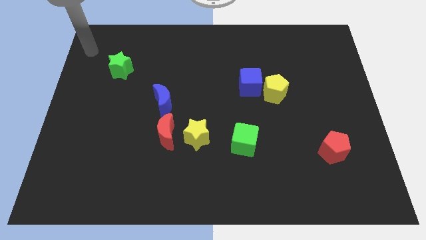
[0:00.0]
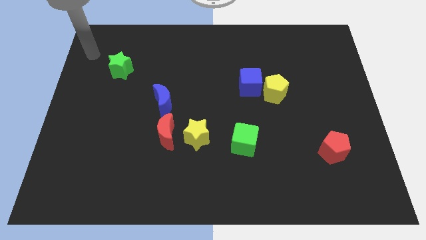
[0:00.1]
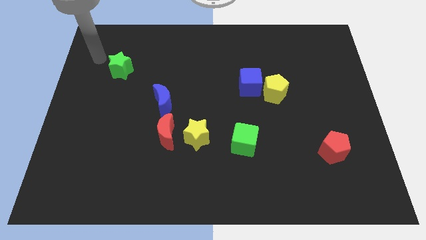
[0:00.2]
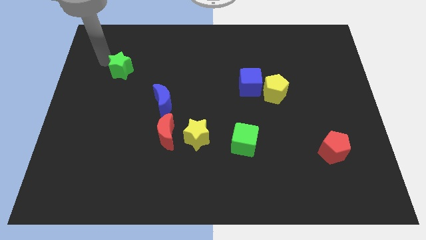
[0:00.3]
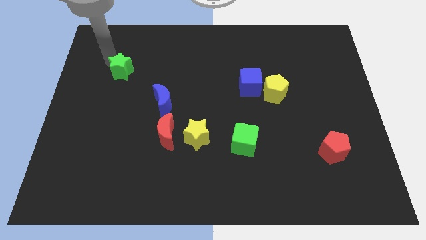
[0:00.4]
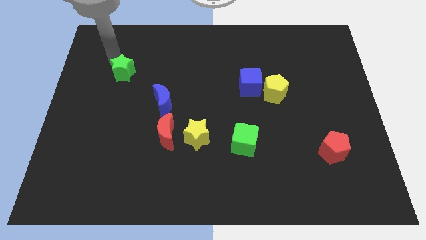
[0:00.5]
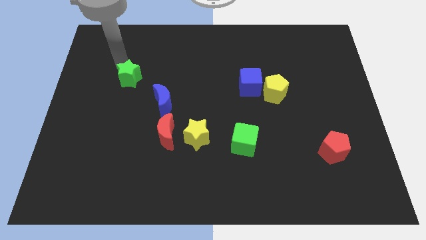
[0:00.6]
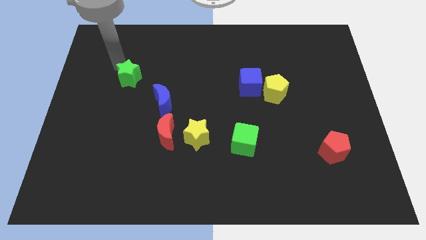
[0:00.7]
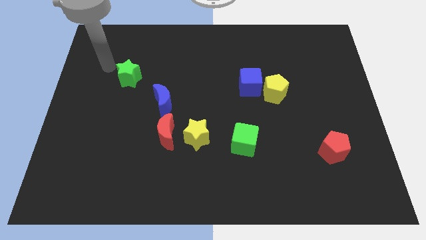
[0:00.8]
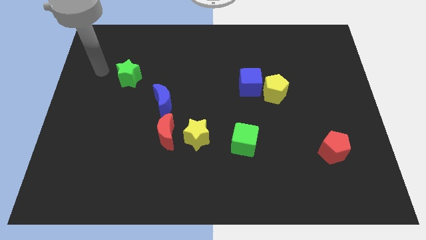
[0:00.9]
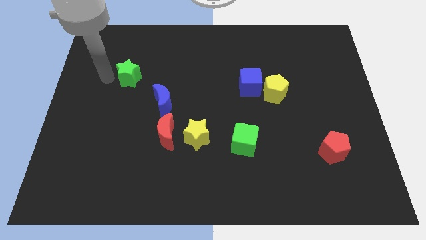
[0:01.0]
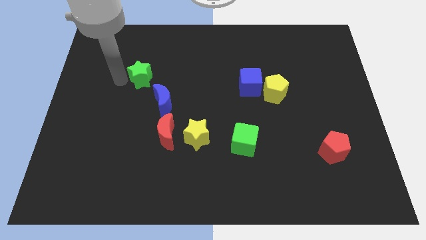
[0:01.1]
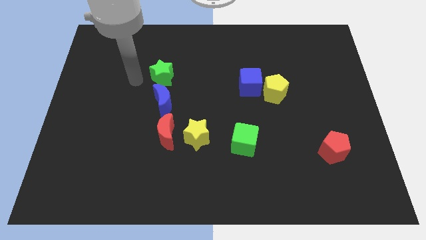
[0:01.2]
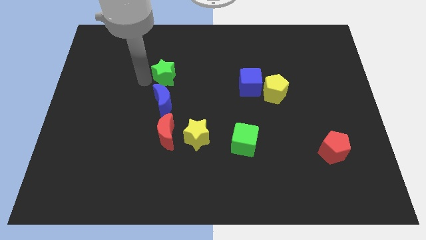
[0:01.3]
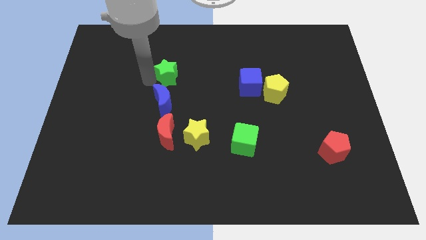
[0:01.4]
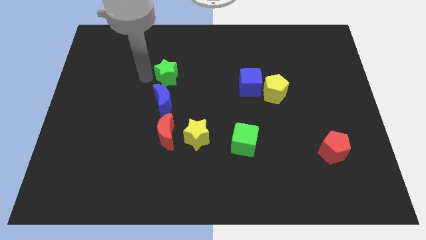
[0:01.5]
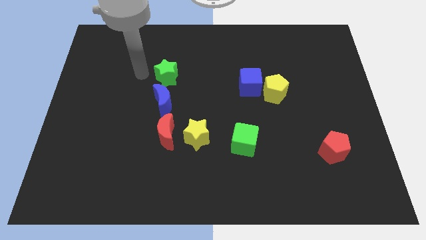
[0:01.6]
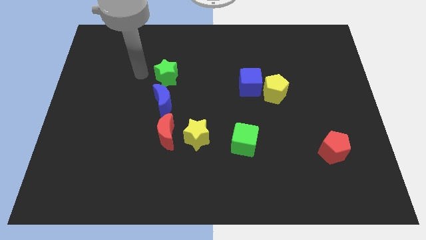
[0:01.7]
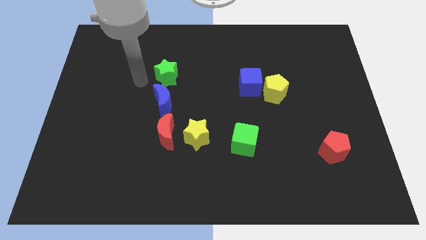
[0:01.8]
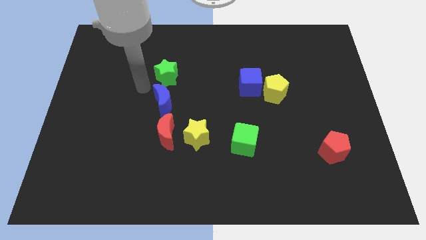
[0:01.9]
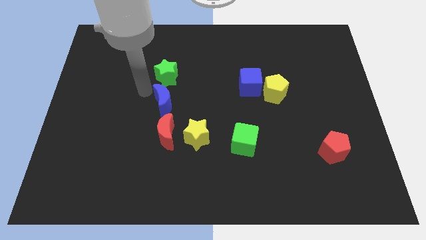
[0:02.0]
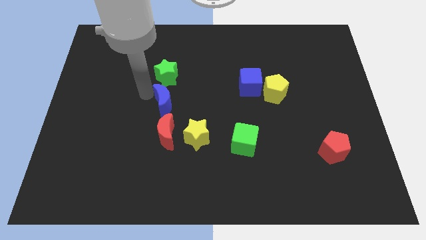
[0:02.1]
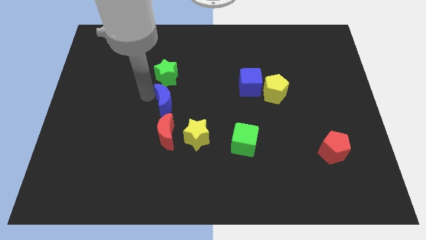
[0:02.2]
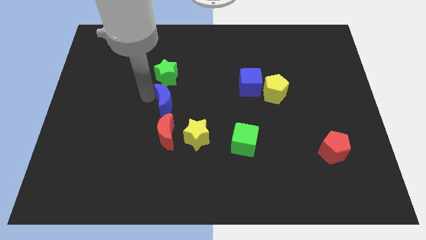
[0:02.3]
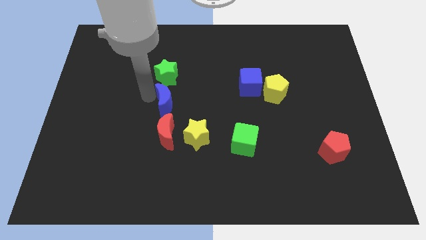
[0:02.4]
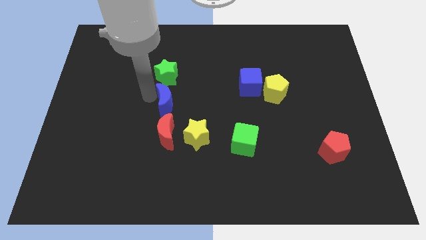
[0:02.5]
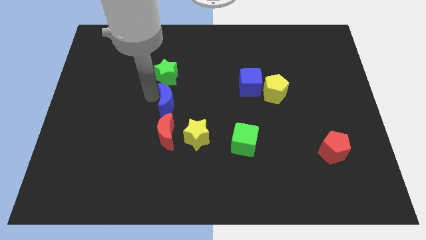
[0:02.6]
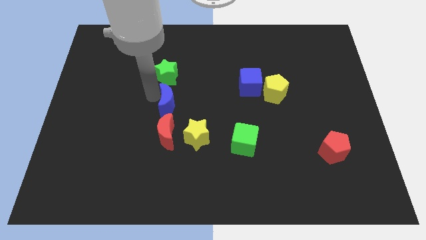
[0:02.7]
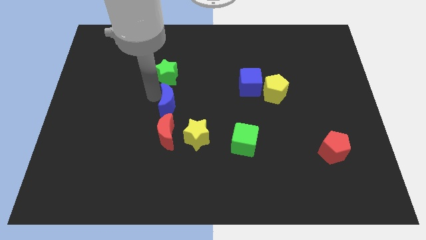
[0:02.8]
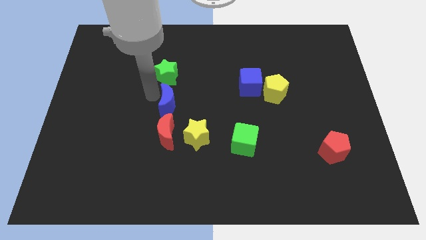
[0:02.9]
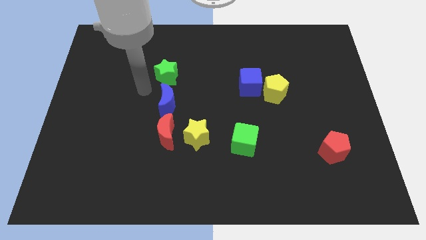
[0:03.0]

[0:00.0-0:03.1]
place the green star on top of the blue crescent

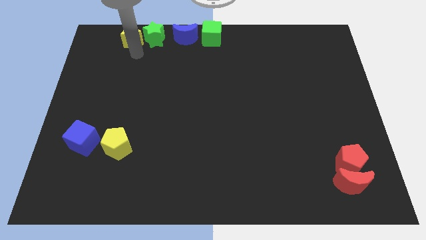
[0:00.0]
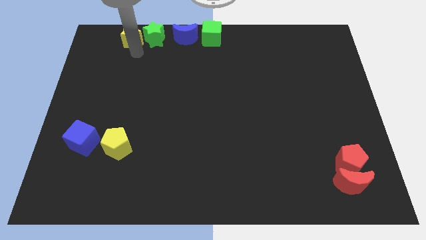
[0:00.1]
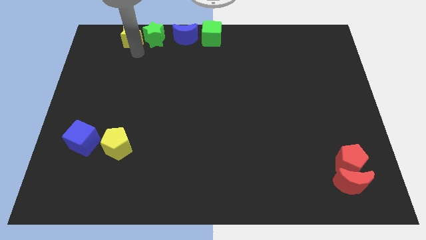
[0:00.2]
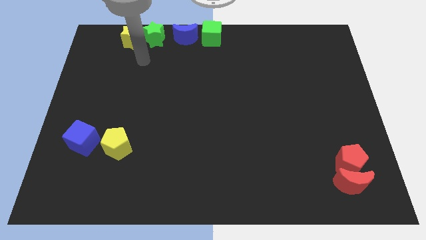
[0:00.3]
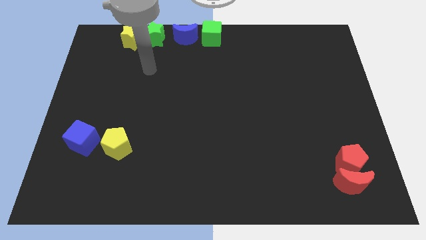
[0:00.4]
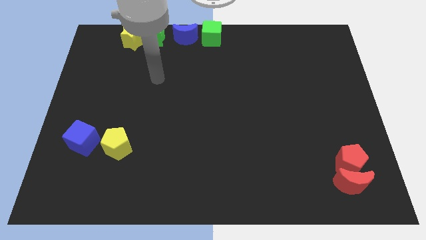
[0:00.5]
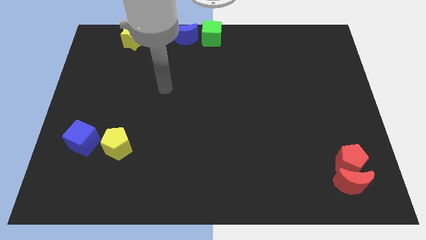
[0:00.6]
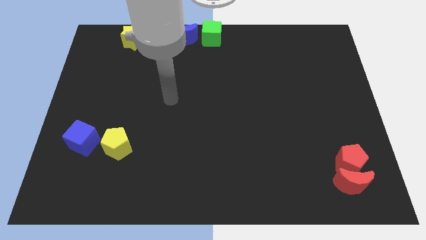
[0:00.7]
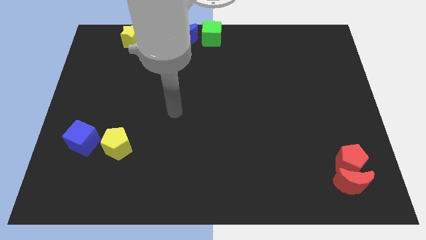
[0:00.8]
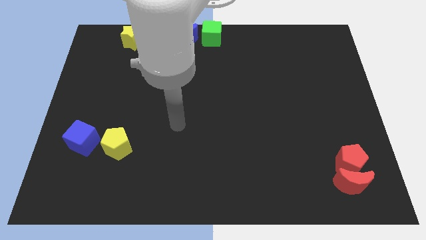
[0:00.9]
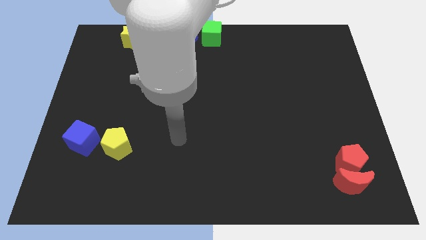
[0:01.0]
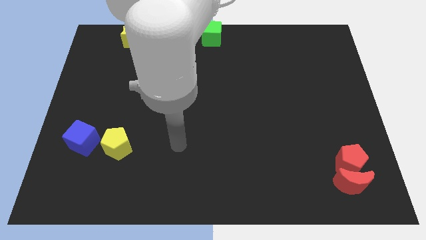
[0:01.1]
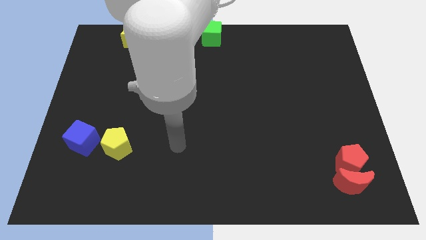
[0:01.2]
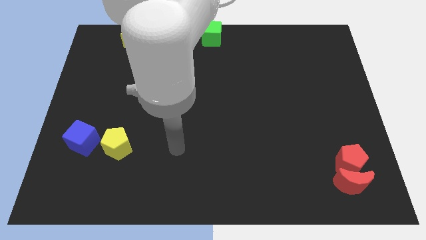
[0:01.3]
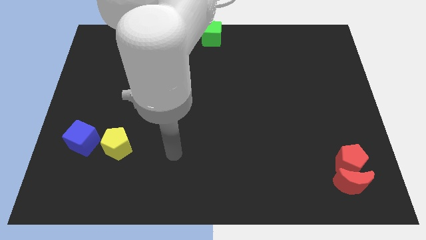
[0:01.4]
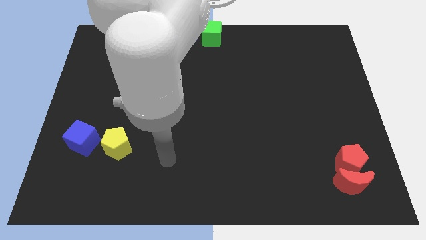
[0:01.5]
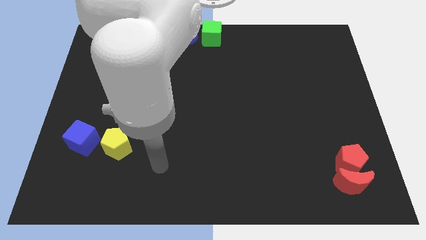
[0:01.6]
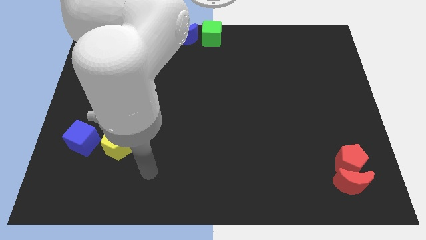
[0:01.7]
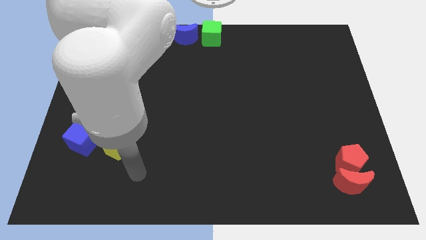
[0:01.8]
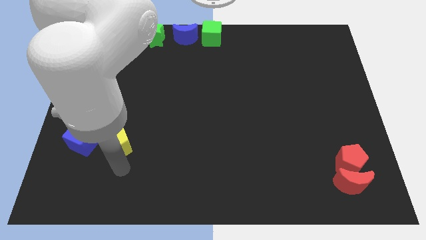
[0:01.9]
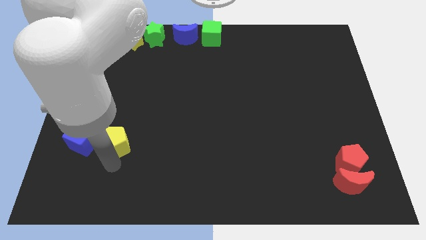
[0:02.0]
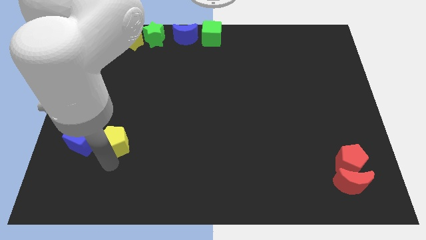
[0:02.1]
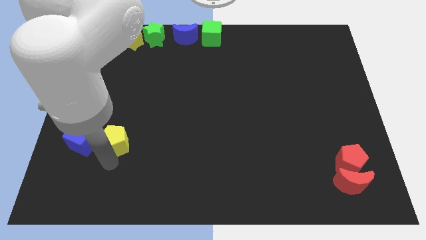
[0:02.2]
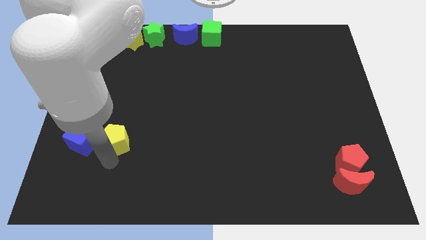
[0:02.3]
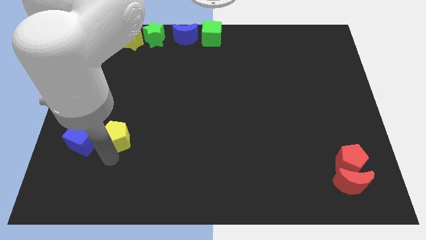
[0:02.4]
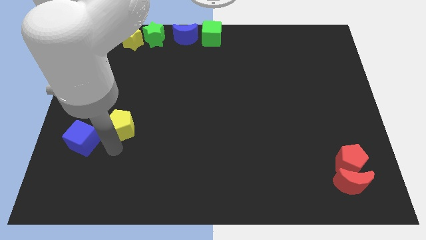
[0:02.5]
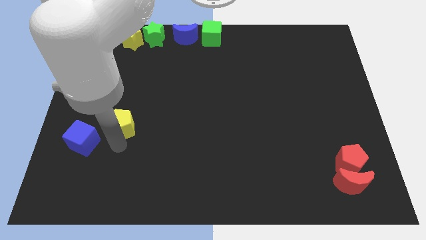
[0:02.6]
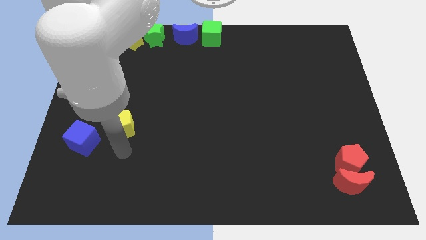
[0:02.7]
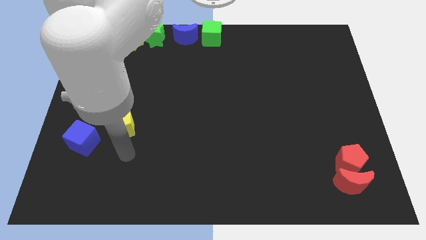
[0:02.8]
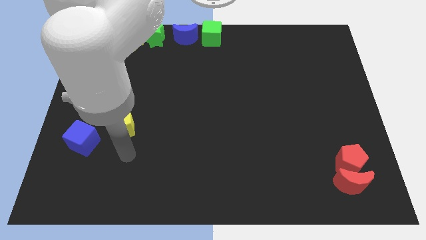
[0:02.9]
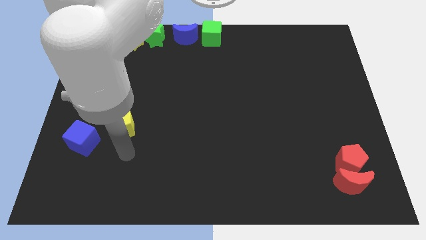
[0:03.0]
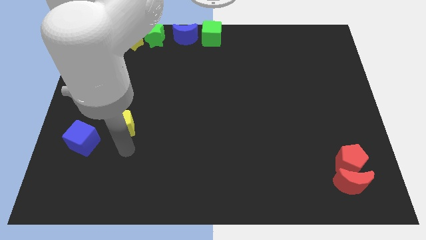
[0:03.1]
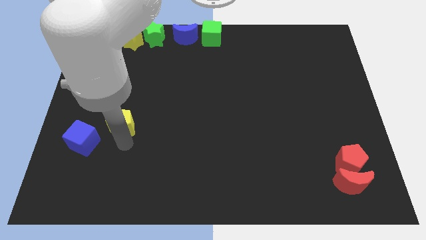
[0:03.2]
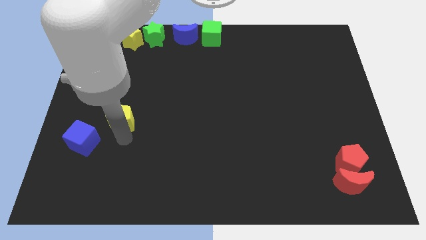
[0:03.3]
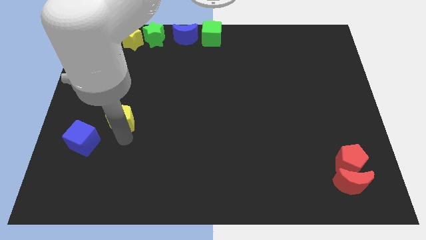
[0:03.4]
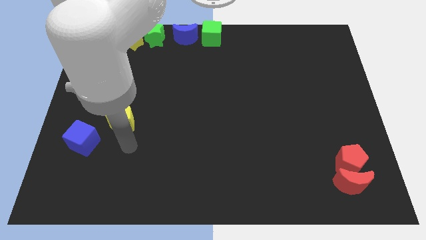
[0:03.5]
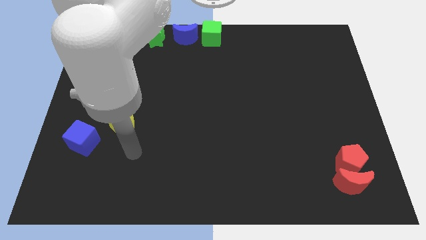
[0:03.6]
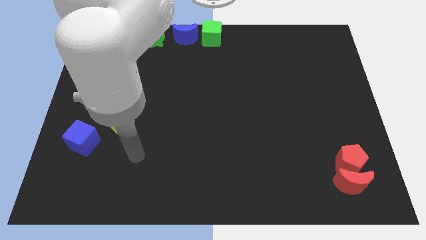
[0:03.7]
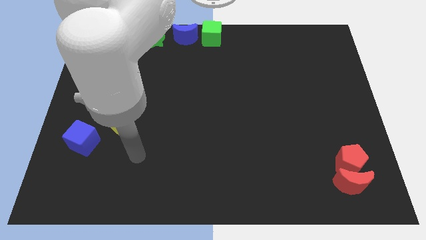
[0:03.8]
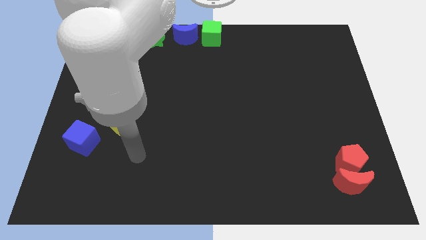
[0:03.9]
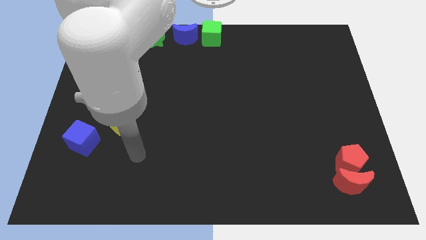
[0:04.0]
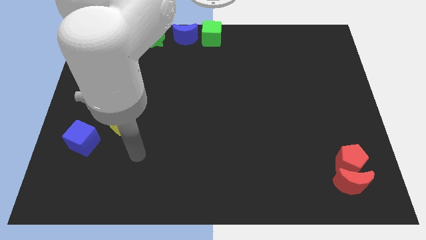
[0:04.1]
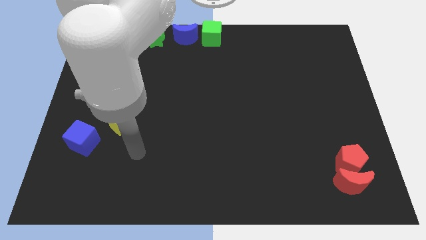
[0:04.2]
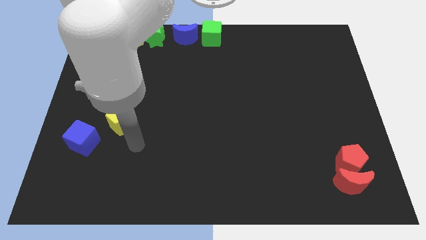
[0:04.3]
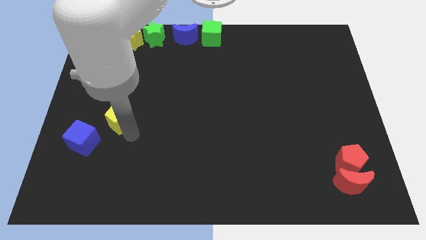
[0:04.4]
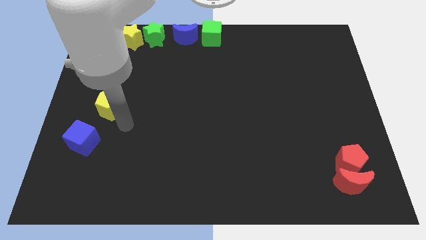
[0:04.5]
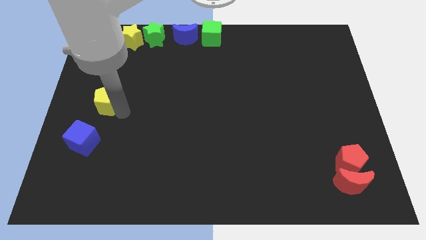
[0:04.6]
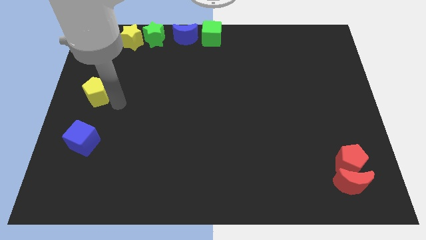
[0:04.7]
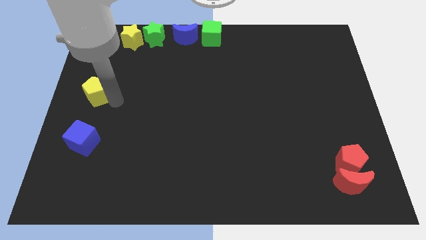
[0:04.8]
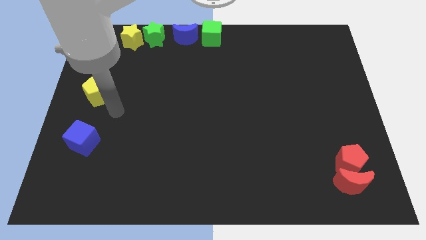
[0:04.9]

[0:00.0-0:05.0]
place the yellow pentagon above the blue cube

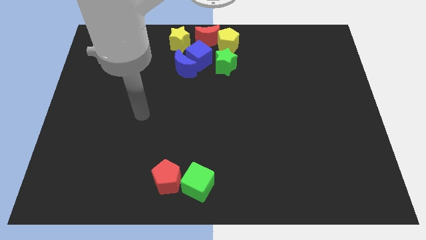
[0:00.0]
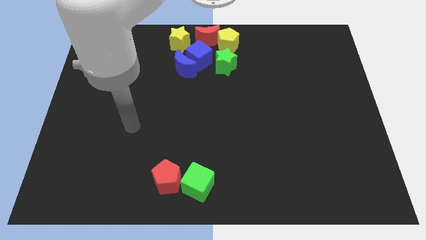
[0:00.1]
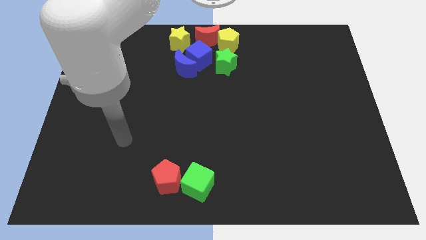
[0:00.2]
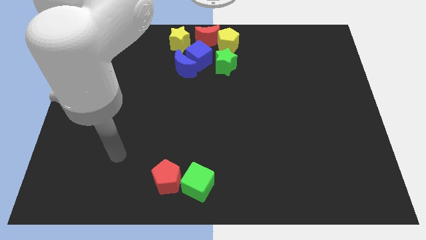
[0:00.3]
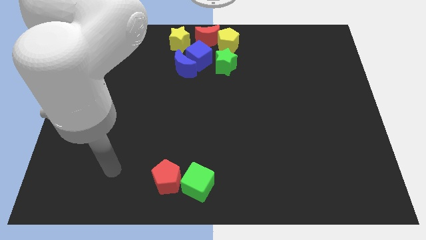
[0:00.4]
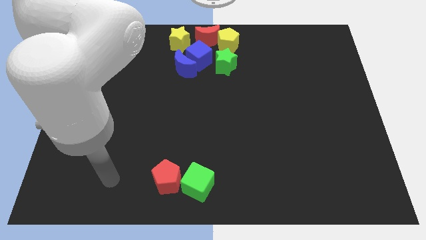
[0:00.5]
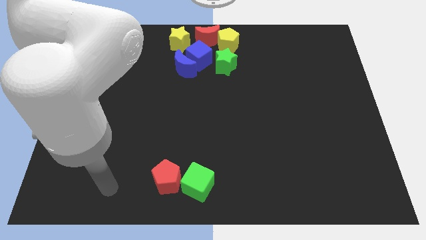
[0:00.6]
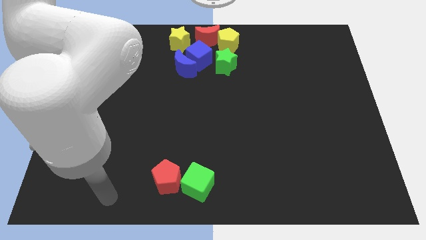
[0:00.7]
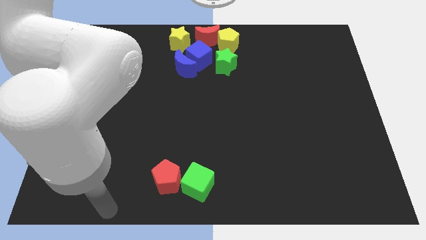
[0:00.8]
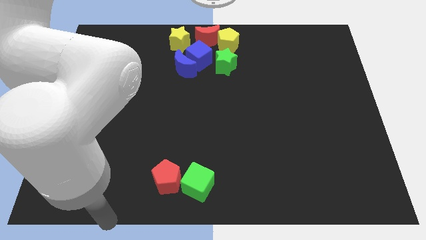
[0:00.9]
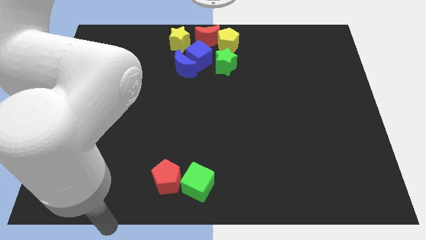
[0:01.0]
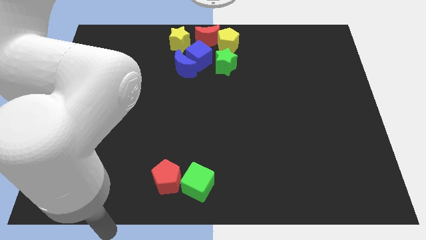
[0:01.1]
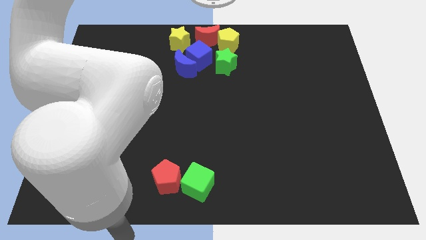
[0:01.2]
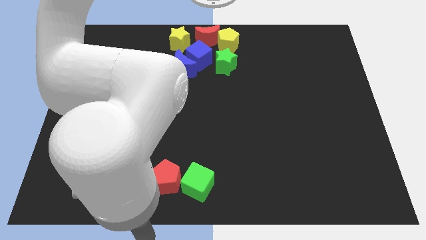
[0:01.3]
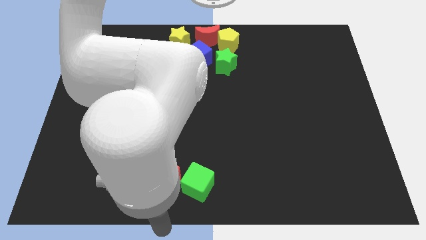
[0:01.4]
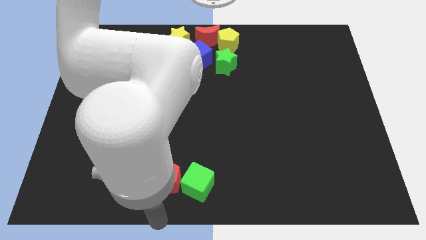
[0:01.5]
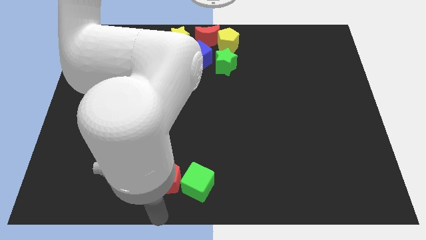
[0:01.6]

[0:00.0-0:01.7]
place your hand under the red pentagon
